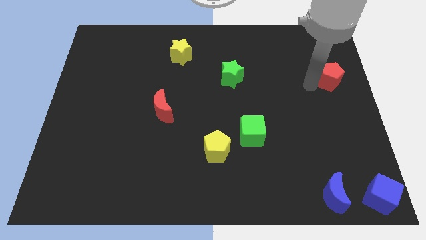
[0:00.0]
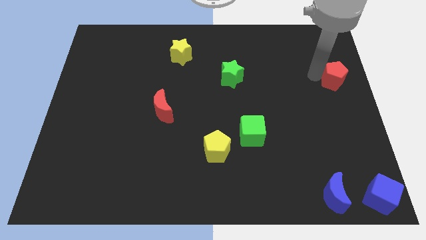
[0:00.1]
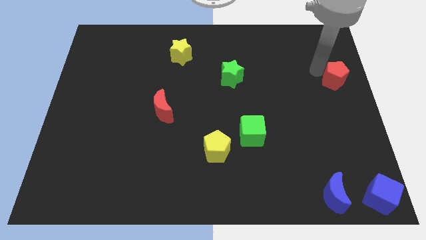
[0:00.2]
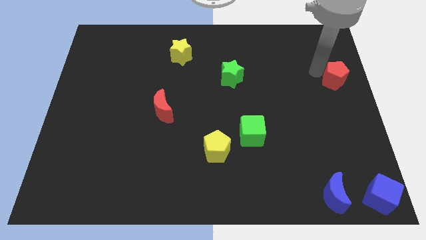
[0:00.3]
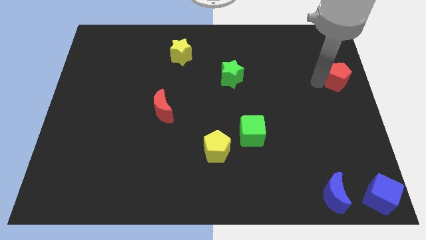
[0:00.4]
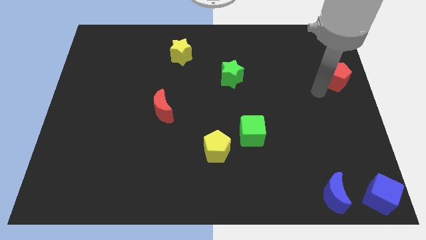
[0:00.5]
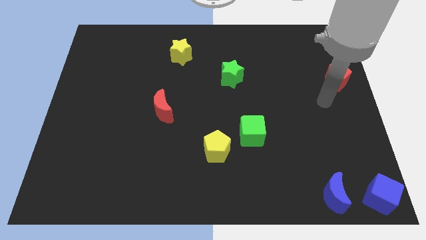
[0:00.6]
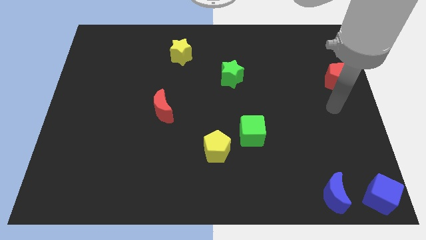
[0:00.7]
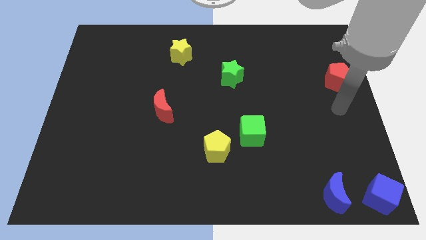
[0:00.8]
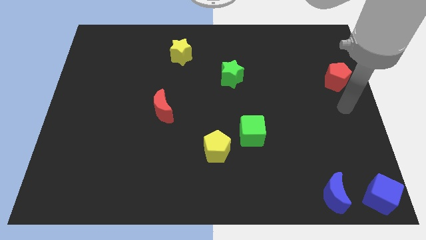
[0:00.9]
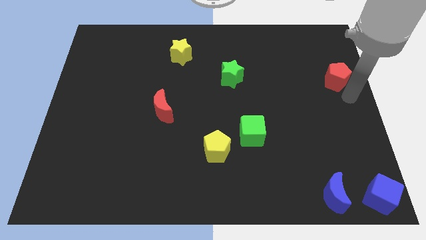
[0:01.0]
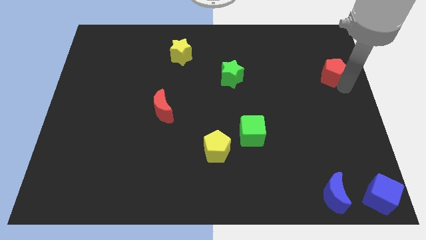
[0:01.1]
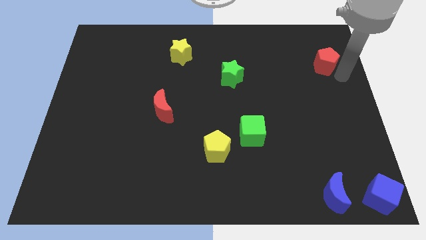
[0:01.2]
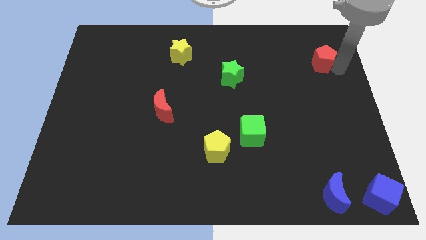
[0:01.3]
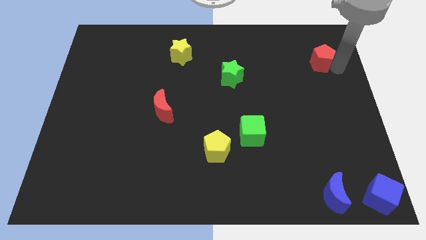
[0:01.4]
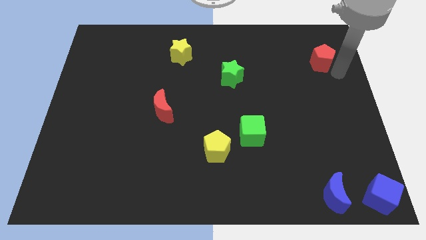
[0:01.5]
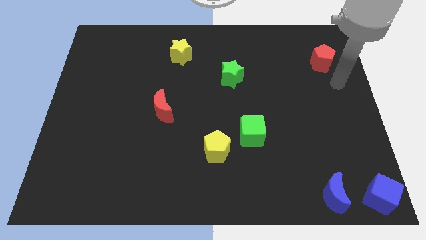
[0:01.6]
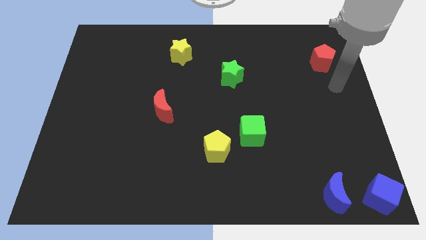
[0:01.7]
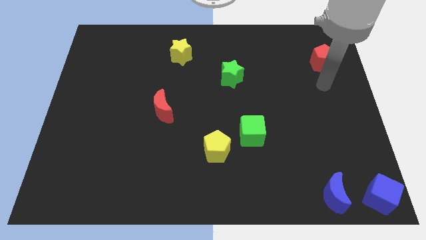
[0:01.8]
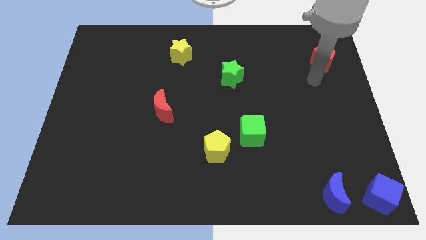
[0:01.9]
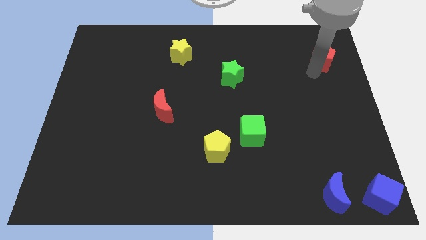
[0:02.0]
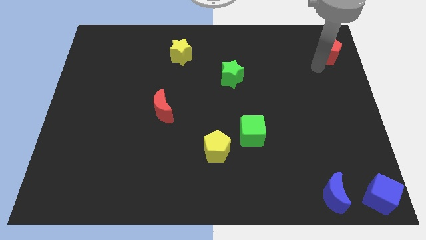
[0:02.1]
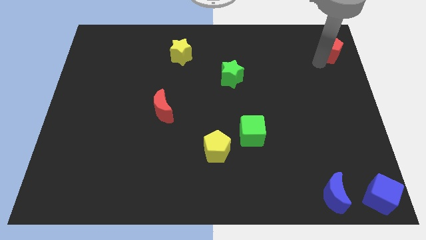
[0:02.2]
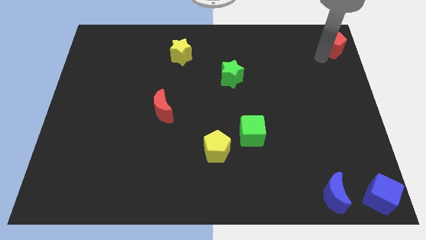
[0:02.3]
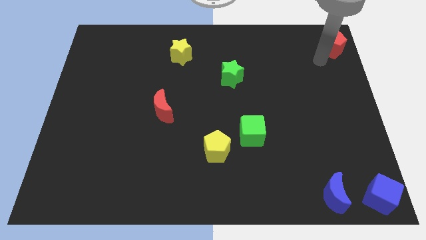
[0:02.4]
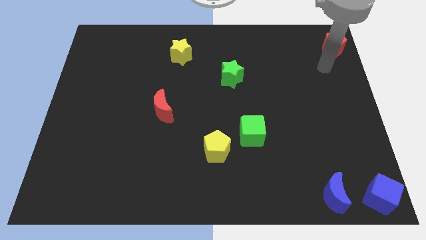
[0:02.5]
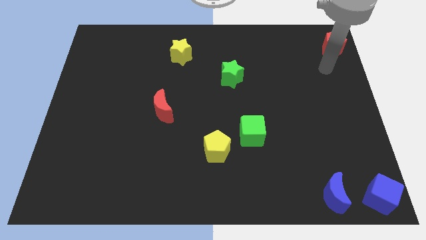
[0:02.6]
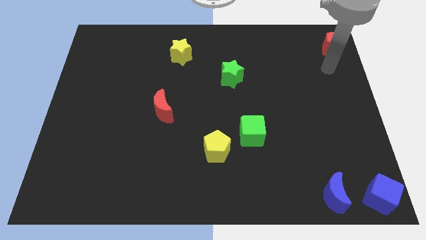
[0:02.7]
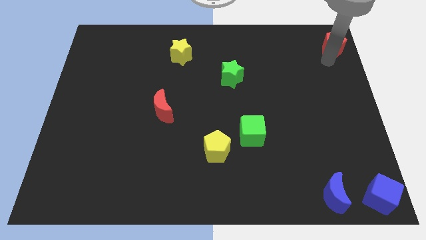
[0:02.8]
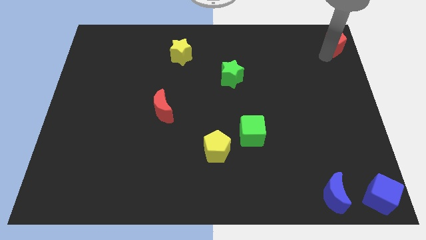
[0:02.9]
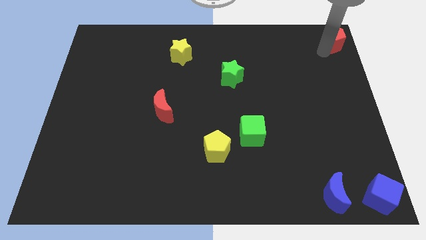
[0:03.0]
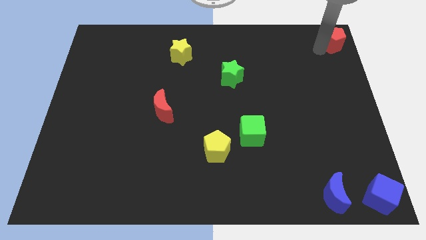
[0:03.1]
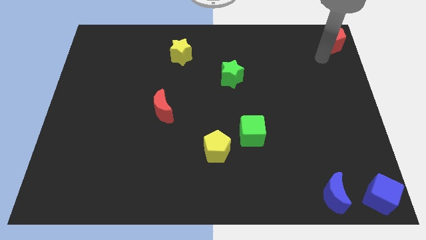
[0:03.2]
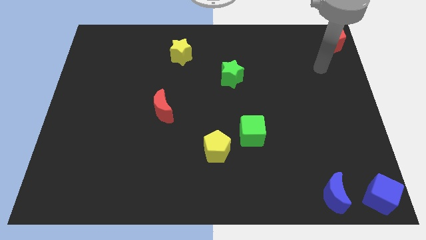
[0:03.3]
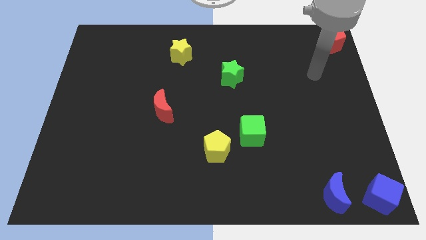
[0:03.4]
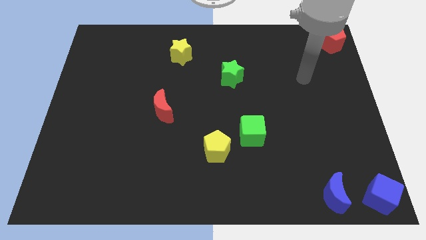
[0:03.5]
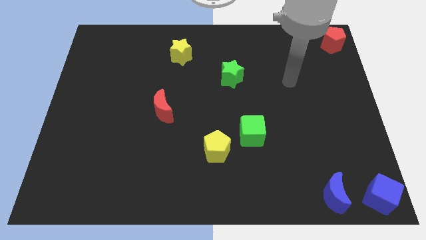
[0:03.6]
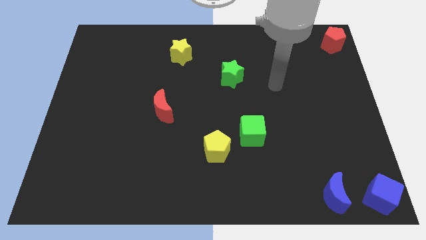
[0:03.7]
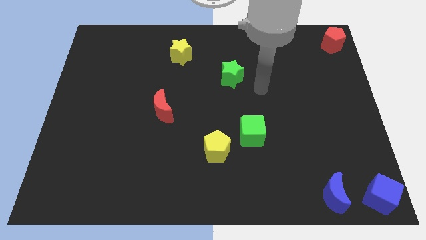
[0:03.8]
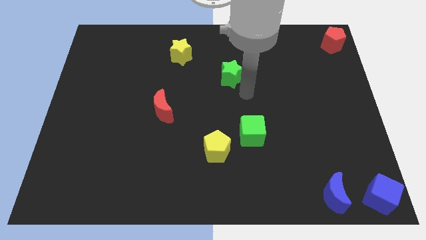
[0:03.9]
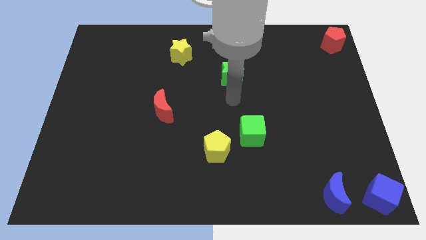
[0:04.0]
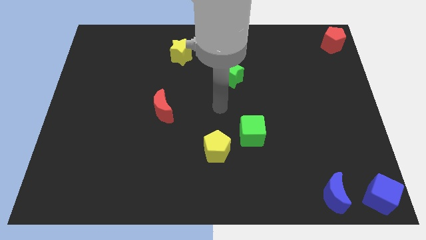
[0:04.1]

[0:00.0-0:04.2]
drag the red pentagon to top right corner of the board

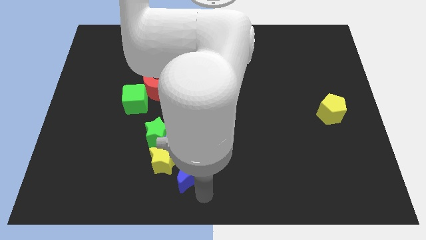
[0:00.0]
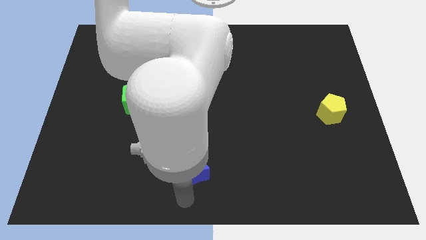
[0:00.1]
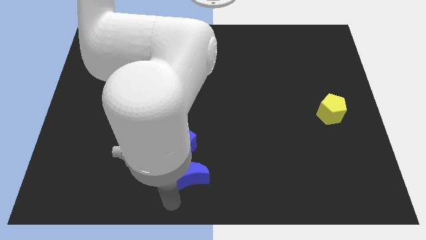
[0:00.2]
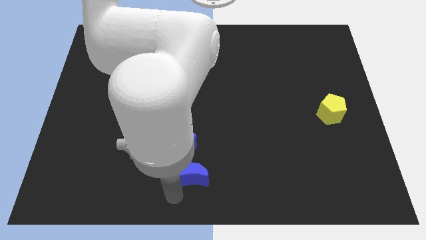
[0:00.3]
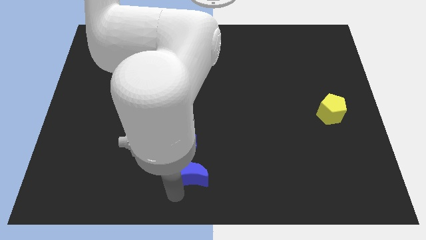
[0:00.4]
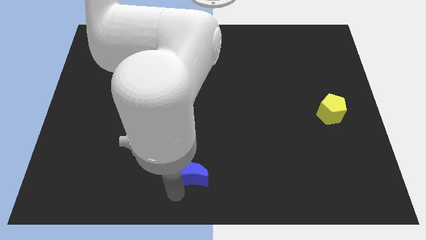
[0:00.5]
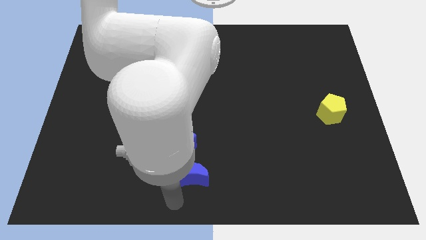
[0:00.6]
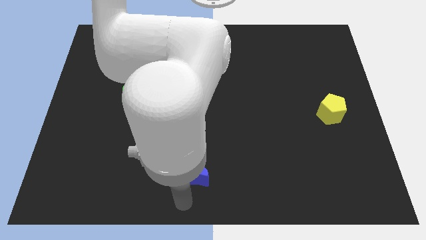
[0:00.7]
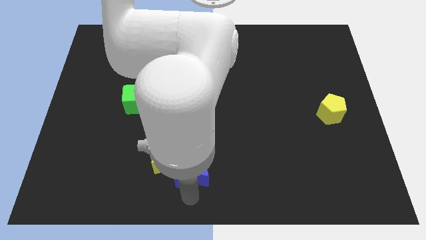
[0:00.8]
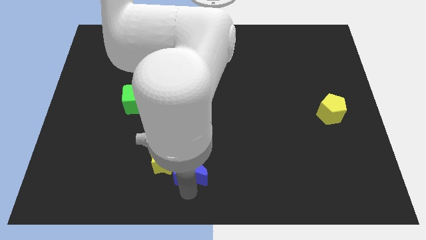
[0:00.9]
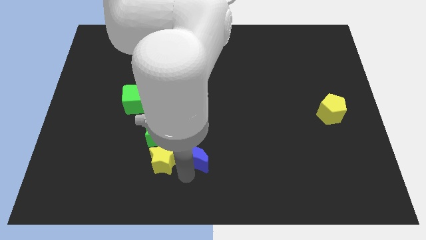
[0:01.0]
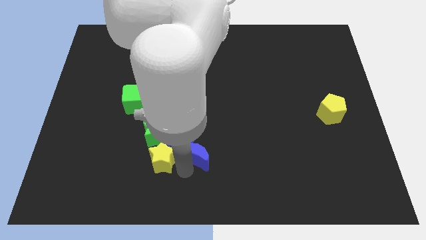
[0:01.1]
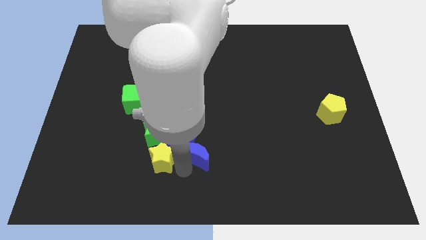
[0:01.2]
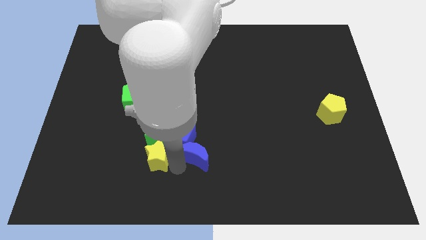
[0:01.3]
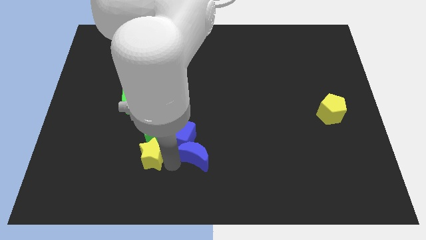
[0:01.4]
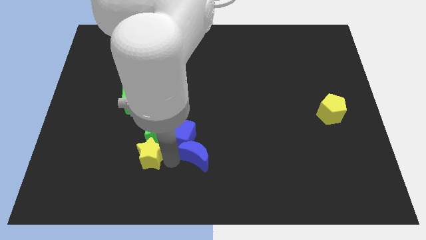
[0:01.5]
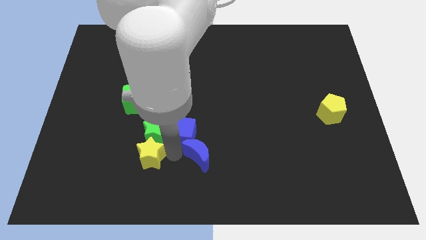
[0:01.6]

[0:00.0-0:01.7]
move blue moon closer to blue cube

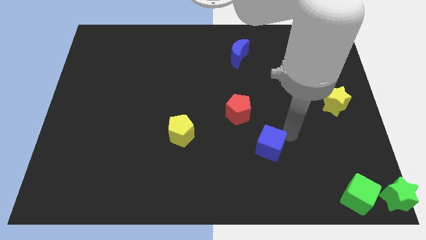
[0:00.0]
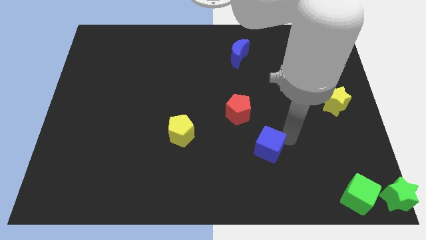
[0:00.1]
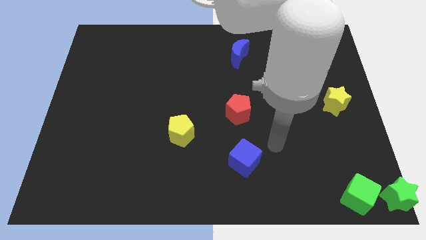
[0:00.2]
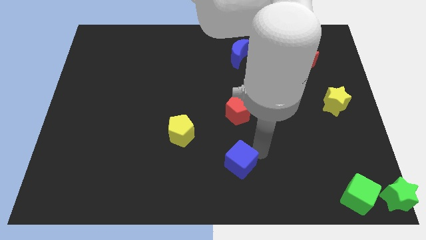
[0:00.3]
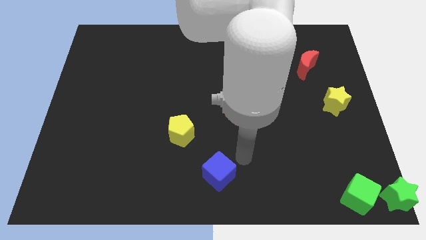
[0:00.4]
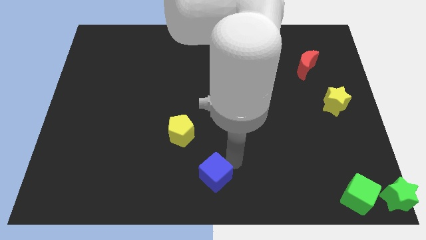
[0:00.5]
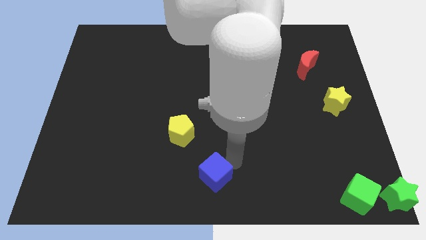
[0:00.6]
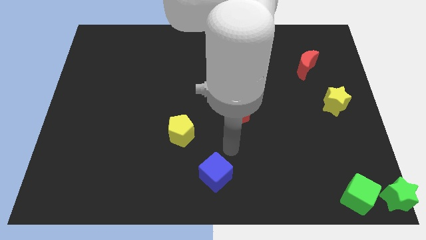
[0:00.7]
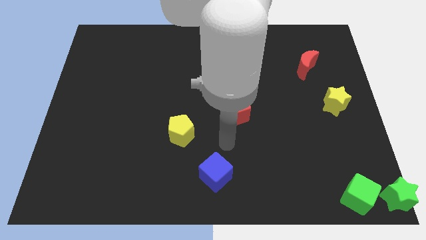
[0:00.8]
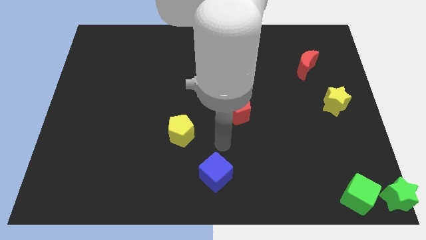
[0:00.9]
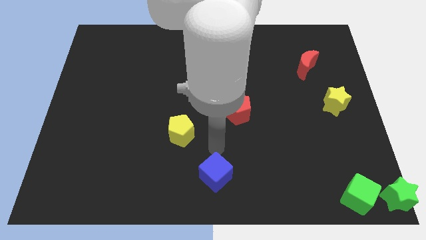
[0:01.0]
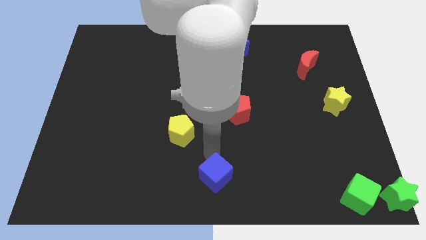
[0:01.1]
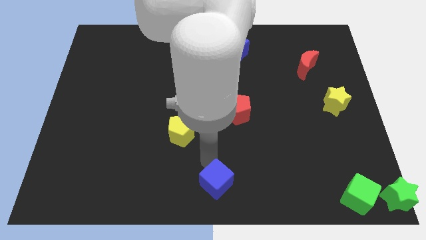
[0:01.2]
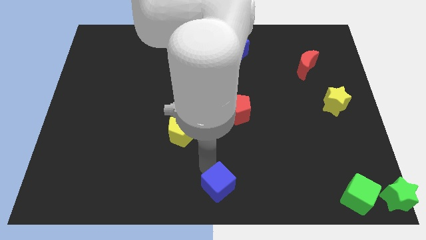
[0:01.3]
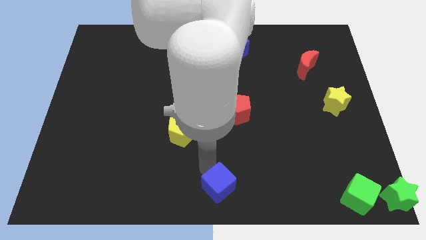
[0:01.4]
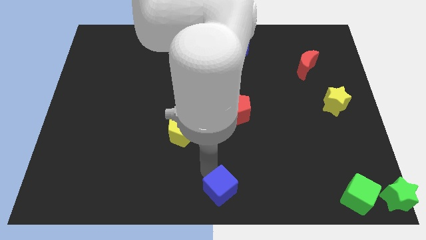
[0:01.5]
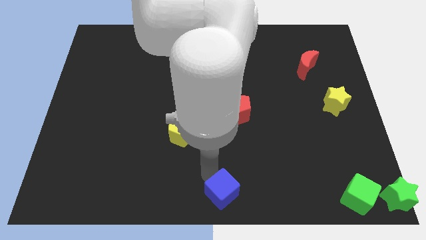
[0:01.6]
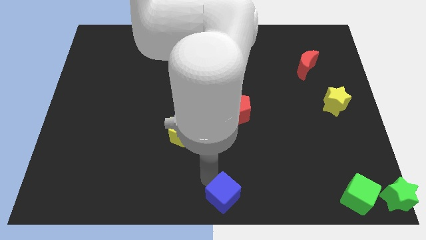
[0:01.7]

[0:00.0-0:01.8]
place the blue square at bottom center of the board

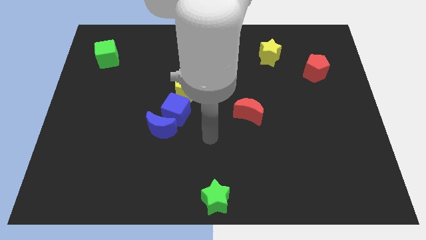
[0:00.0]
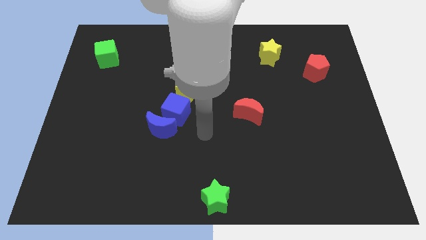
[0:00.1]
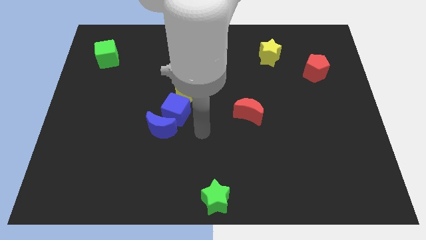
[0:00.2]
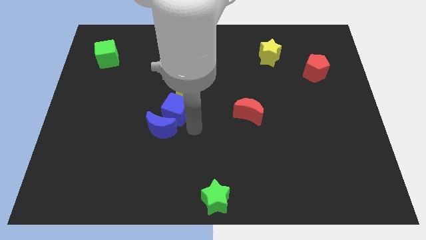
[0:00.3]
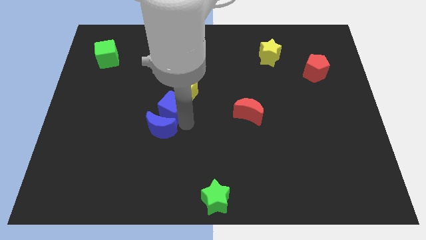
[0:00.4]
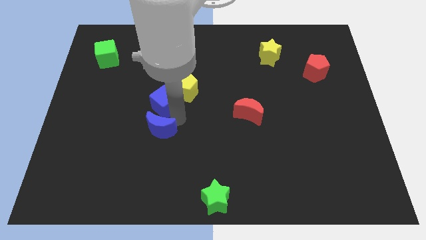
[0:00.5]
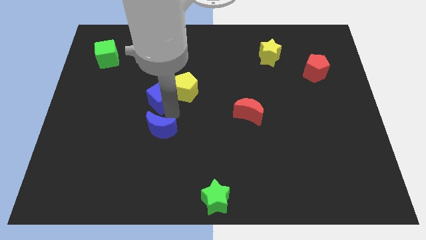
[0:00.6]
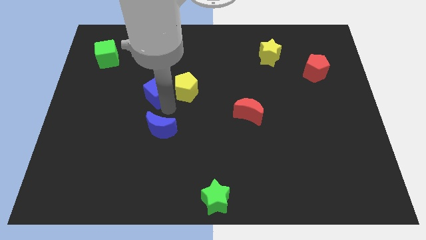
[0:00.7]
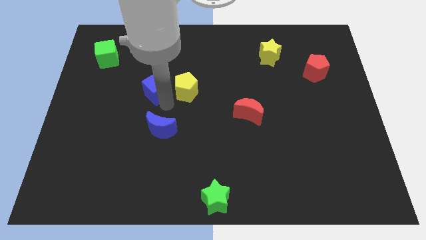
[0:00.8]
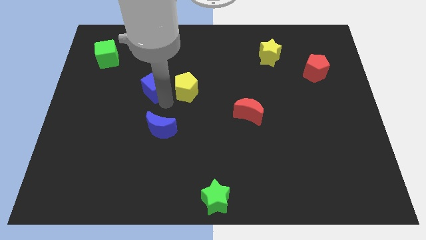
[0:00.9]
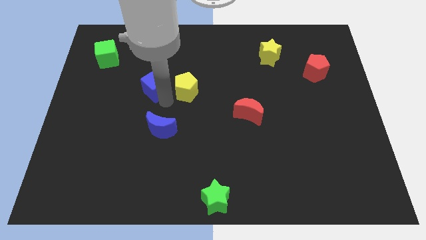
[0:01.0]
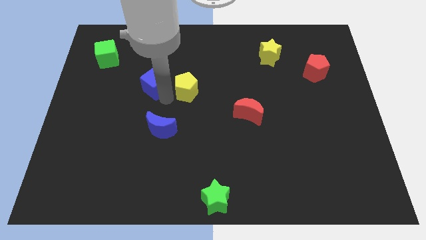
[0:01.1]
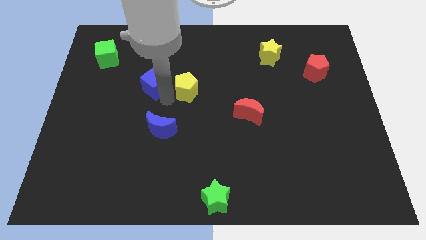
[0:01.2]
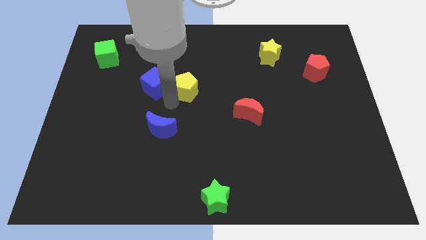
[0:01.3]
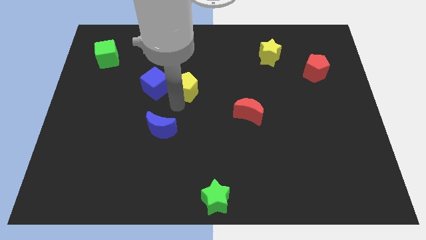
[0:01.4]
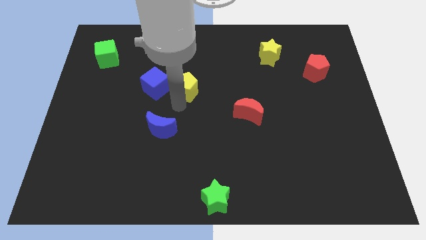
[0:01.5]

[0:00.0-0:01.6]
place blue cube left to yellow pentagon
